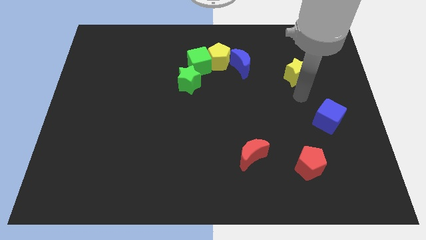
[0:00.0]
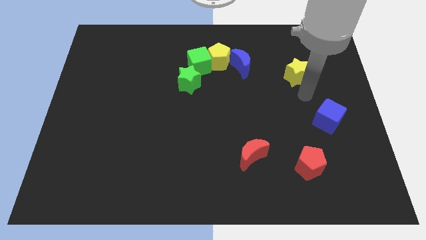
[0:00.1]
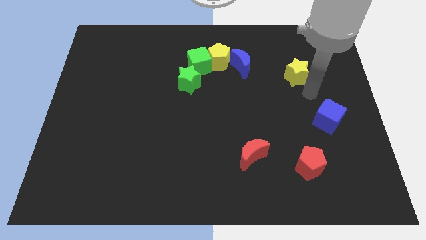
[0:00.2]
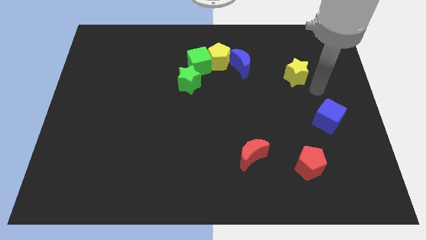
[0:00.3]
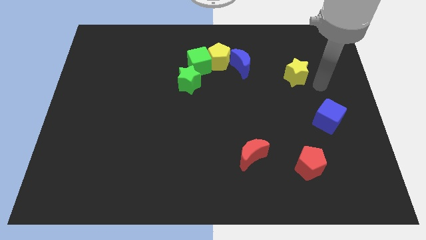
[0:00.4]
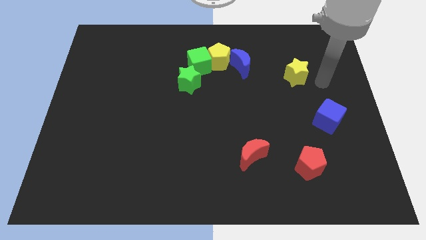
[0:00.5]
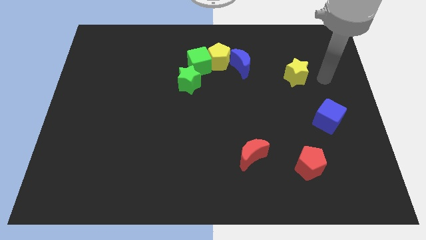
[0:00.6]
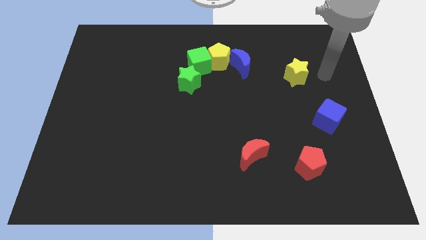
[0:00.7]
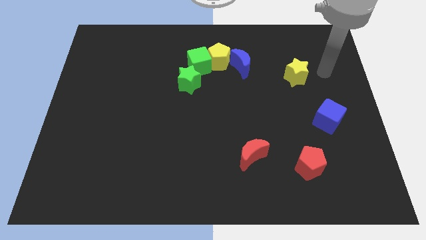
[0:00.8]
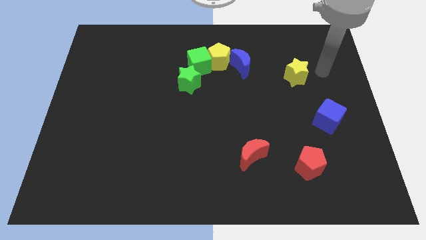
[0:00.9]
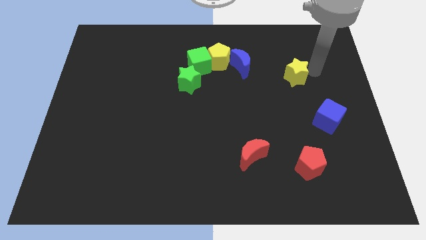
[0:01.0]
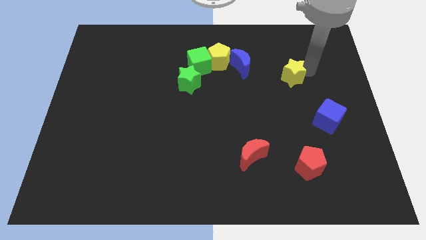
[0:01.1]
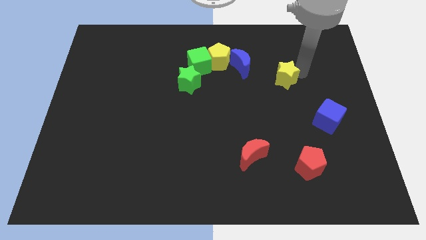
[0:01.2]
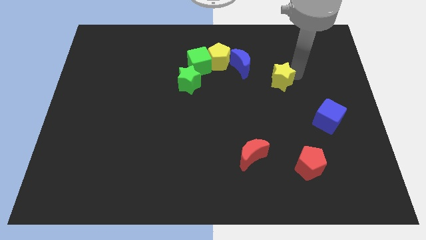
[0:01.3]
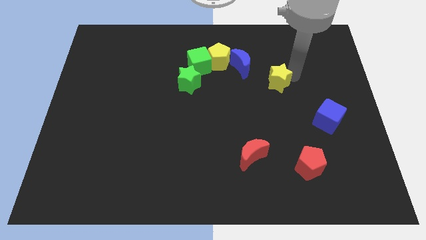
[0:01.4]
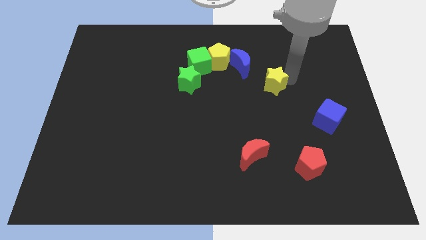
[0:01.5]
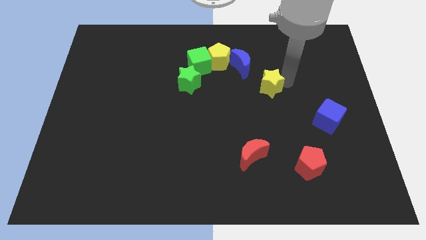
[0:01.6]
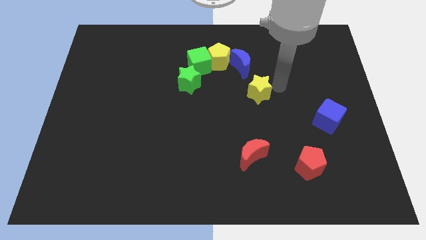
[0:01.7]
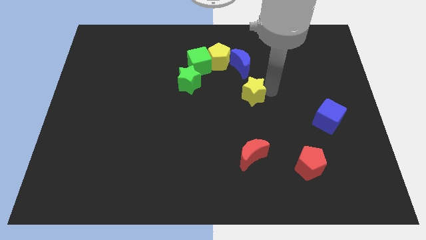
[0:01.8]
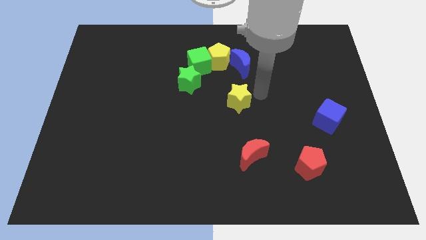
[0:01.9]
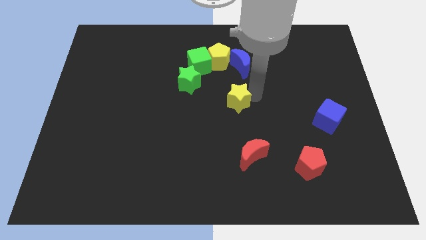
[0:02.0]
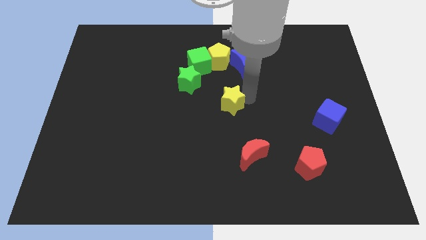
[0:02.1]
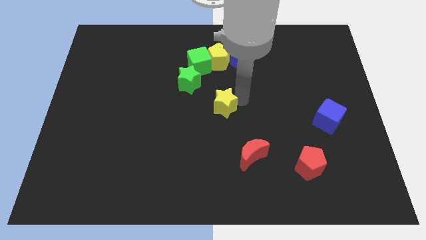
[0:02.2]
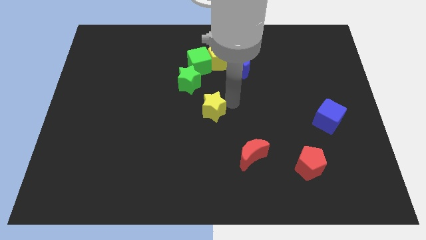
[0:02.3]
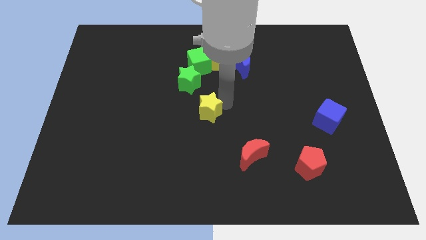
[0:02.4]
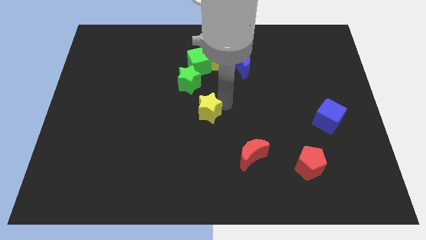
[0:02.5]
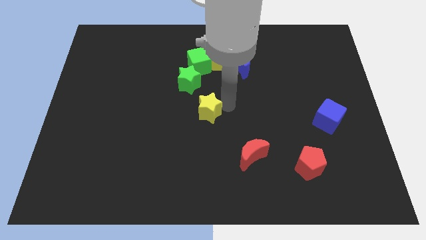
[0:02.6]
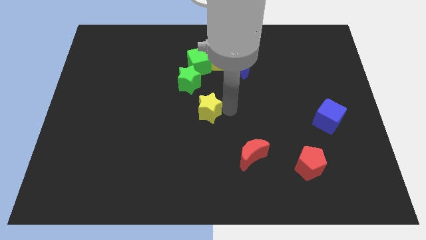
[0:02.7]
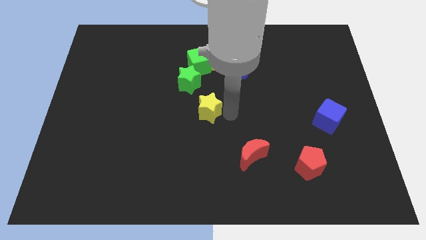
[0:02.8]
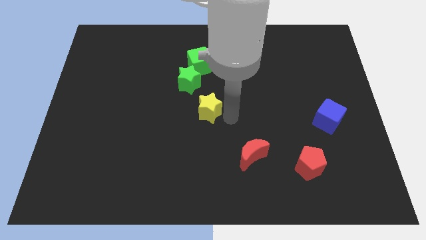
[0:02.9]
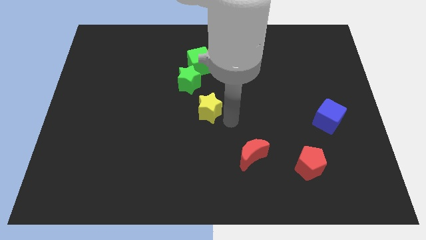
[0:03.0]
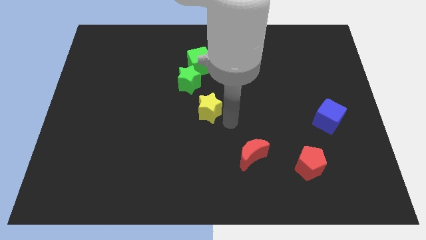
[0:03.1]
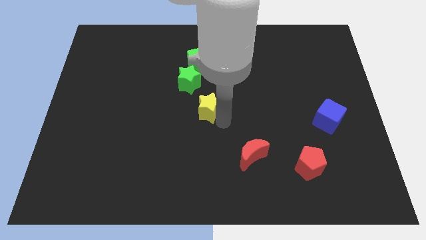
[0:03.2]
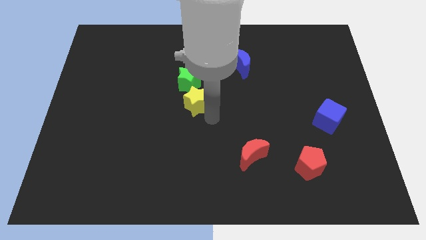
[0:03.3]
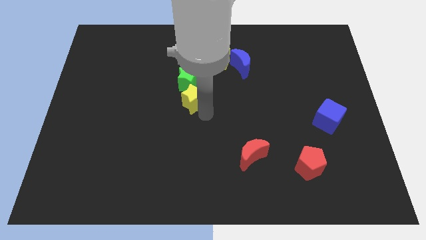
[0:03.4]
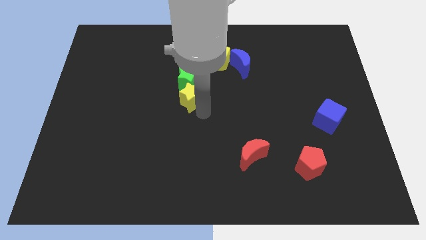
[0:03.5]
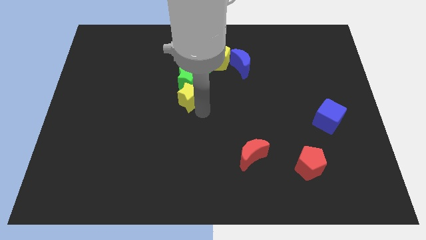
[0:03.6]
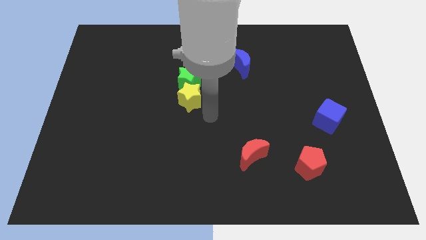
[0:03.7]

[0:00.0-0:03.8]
place the yellow star below the green star

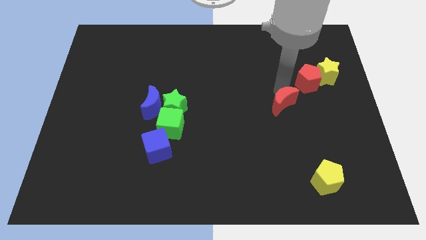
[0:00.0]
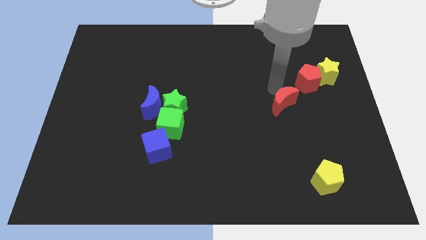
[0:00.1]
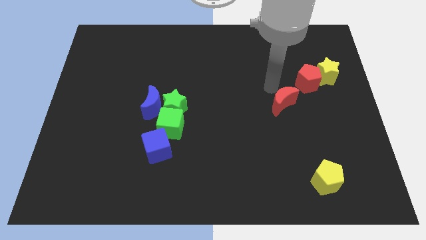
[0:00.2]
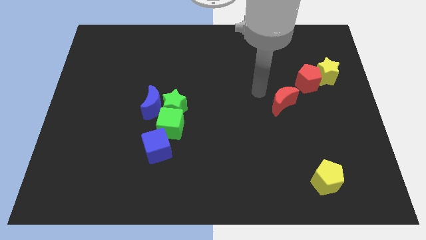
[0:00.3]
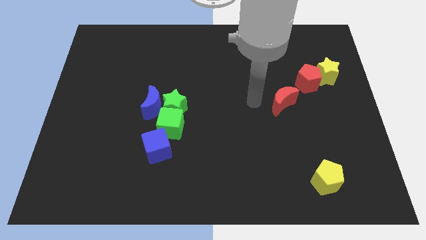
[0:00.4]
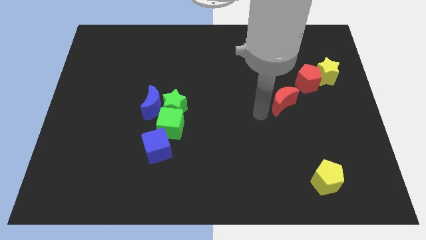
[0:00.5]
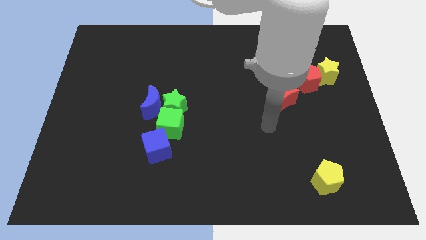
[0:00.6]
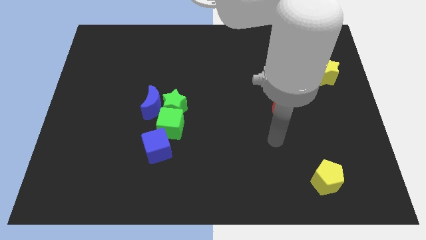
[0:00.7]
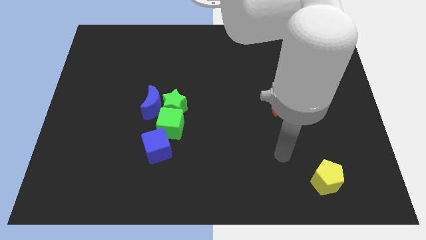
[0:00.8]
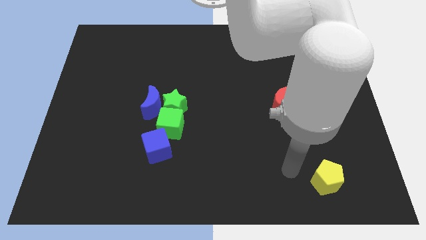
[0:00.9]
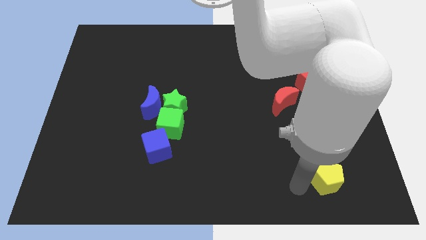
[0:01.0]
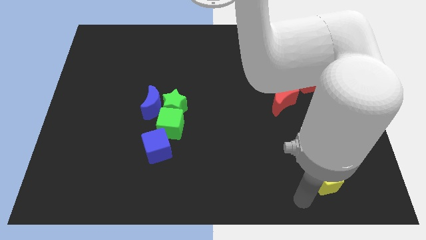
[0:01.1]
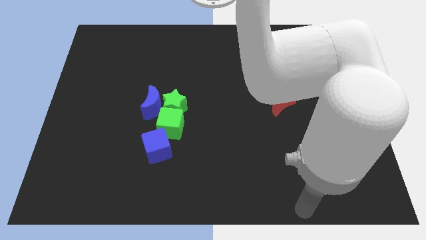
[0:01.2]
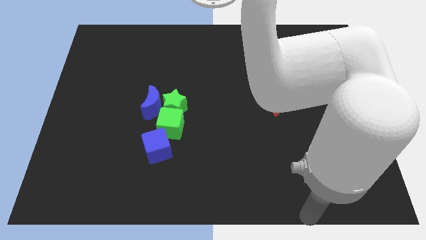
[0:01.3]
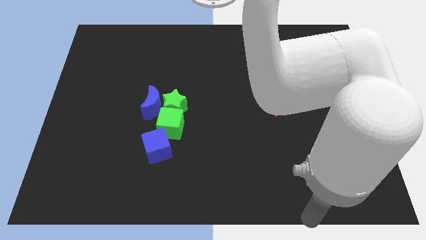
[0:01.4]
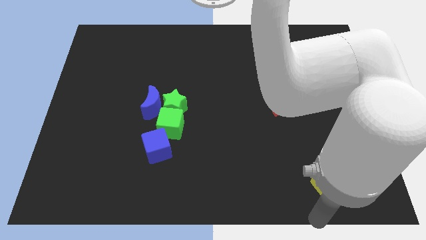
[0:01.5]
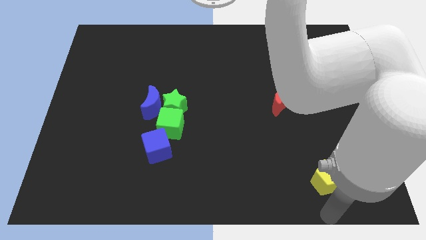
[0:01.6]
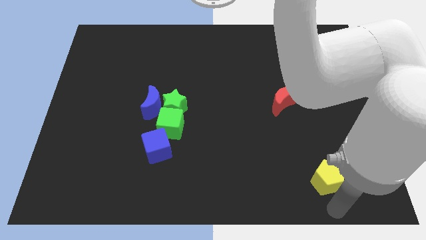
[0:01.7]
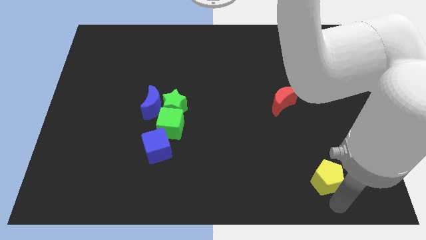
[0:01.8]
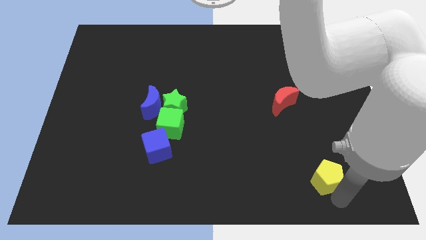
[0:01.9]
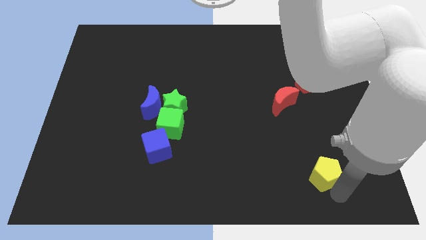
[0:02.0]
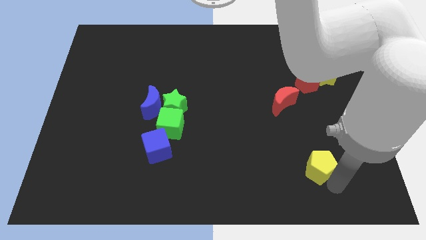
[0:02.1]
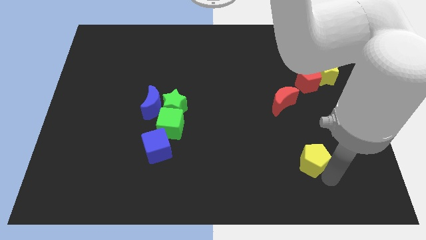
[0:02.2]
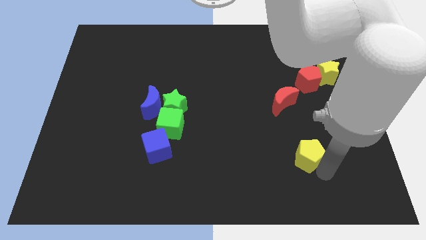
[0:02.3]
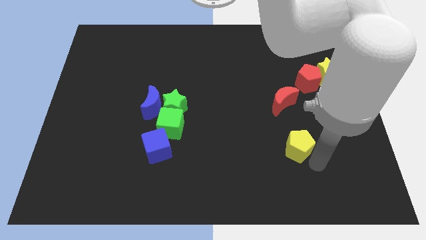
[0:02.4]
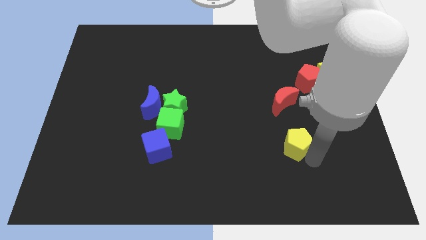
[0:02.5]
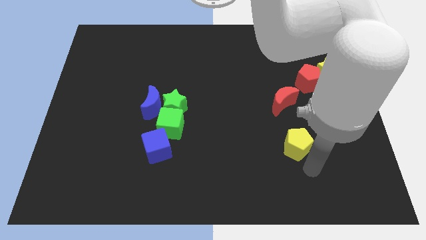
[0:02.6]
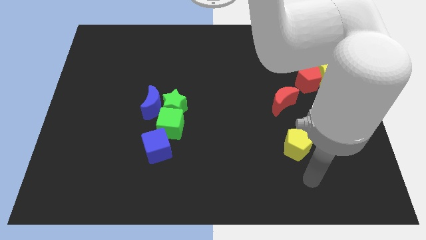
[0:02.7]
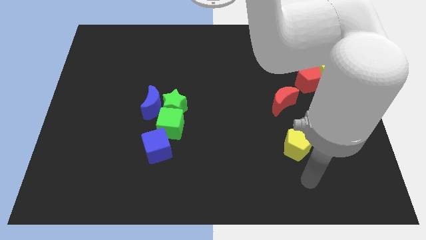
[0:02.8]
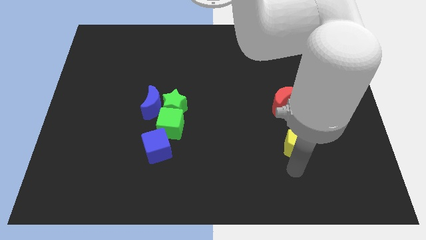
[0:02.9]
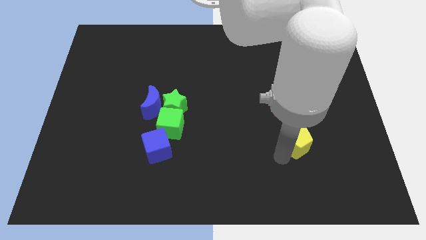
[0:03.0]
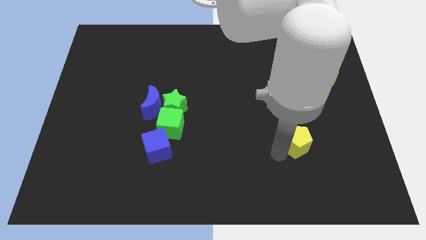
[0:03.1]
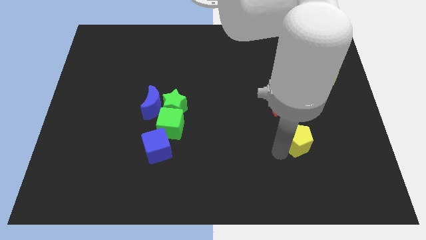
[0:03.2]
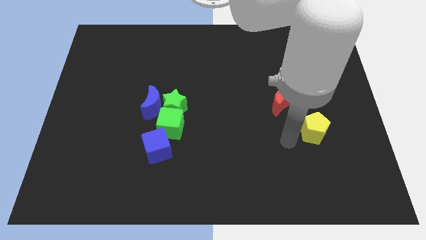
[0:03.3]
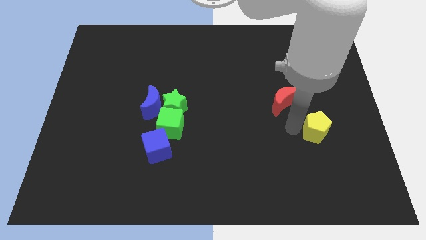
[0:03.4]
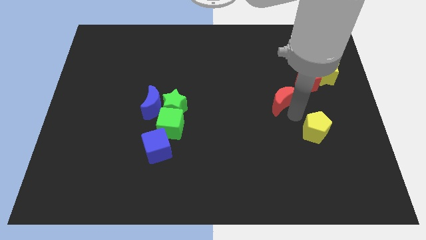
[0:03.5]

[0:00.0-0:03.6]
push the yellow pentagon towards the red blocks

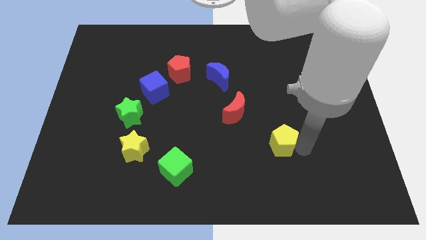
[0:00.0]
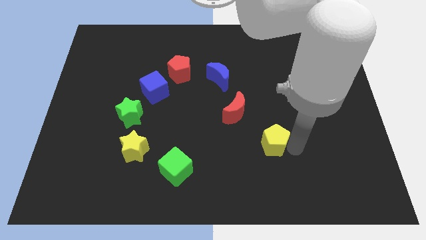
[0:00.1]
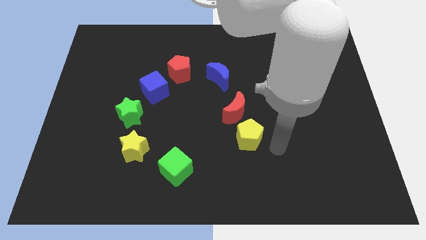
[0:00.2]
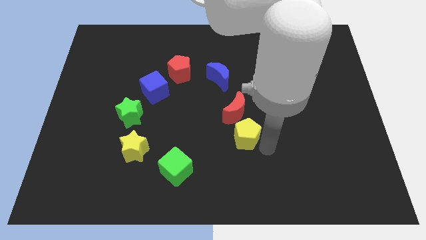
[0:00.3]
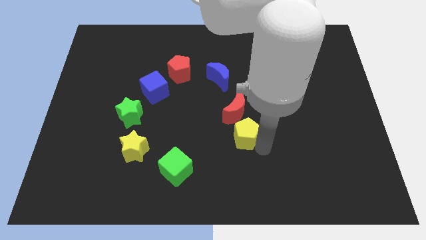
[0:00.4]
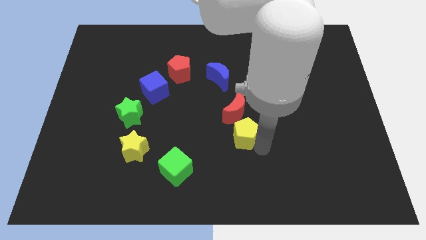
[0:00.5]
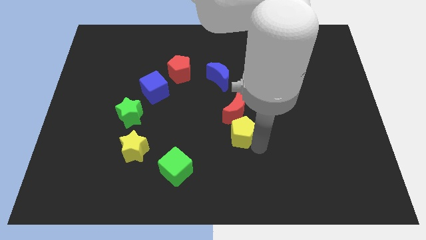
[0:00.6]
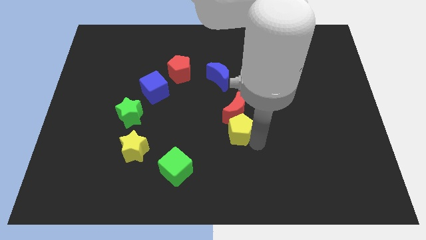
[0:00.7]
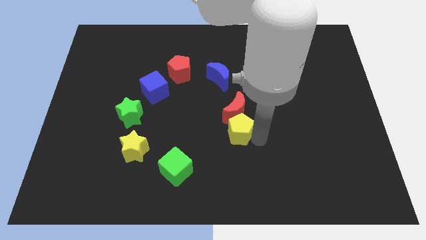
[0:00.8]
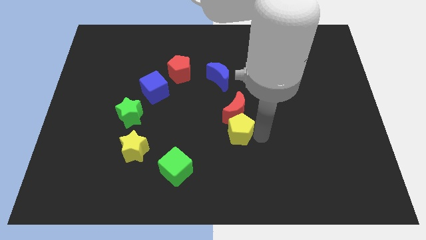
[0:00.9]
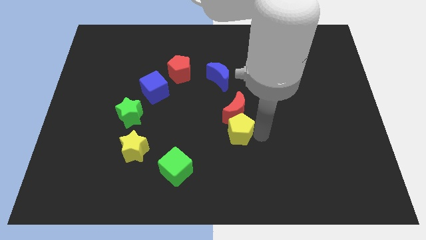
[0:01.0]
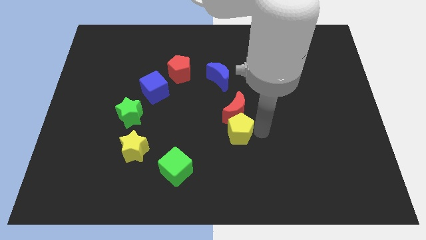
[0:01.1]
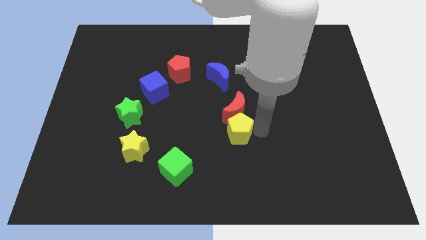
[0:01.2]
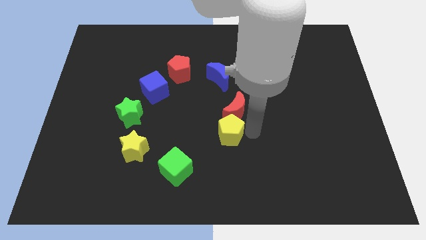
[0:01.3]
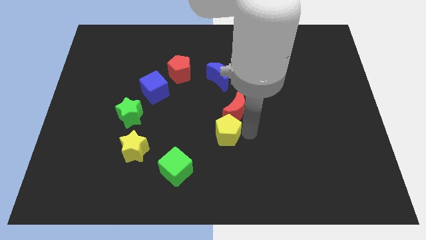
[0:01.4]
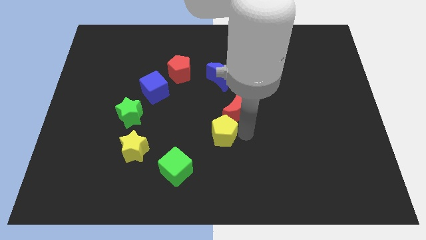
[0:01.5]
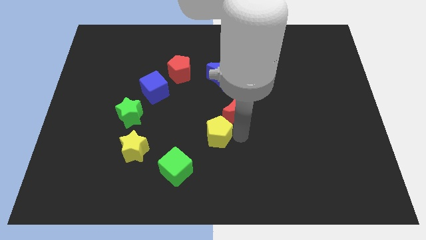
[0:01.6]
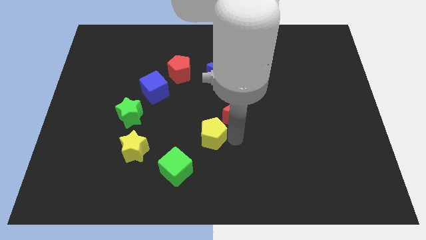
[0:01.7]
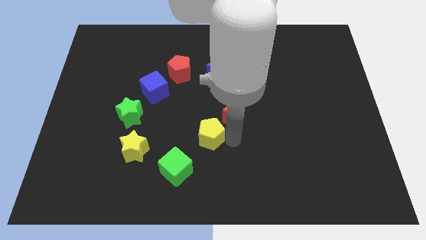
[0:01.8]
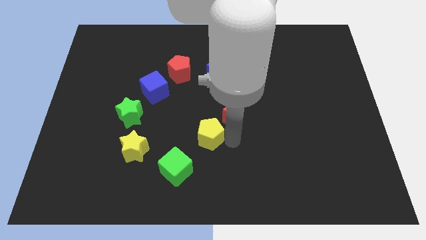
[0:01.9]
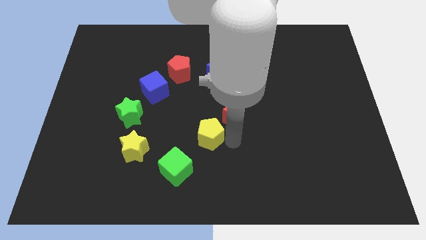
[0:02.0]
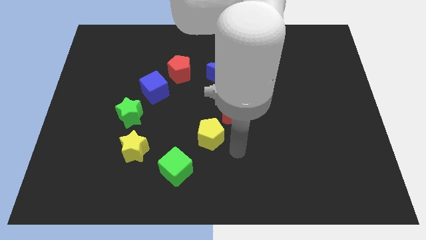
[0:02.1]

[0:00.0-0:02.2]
move the yellow pentagon diagonally bottom left to the red moon
